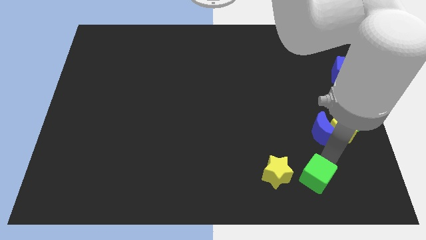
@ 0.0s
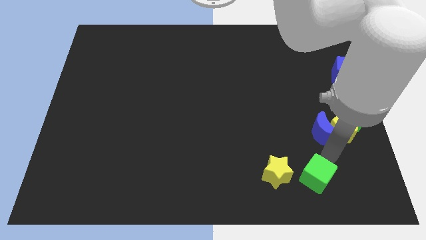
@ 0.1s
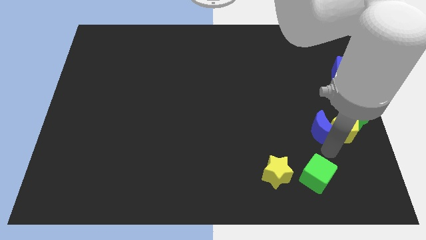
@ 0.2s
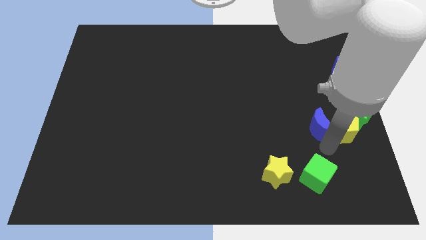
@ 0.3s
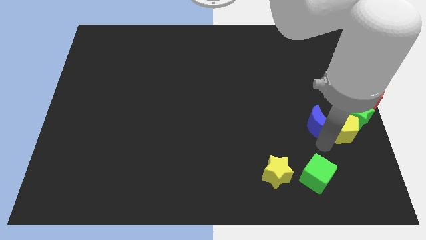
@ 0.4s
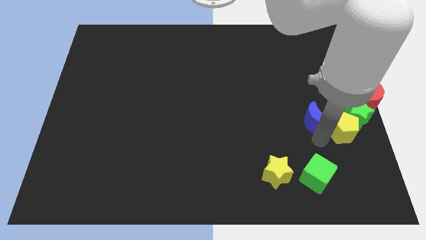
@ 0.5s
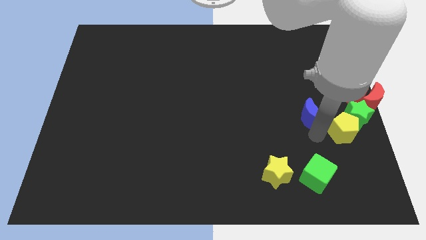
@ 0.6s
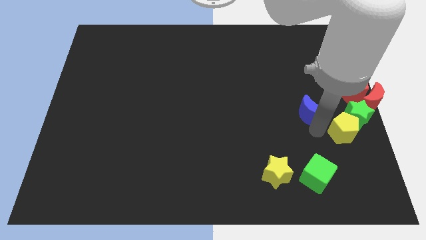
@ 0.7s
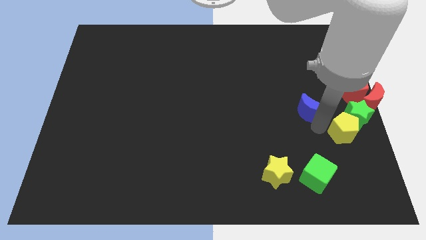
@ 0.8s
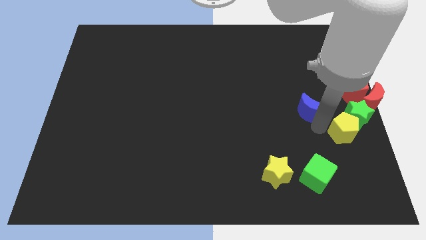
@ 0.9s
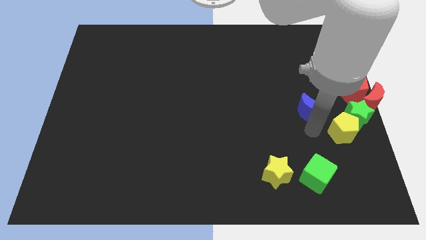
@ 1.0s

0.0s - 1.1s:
slide blue moon slightly upward

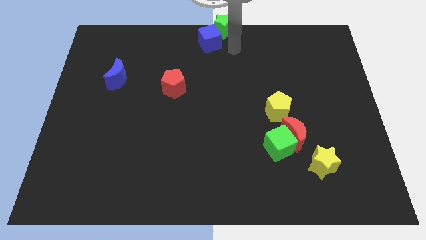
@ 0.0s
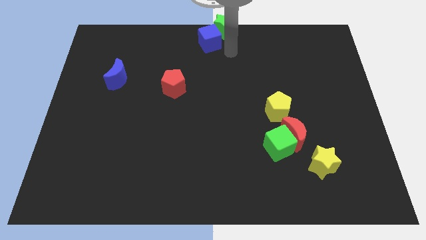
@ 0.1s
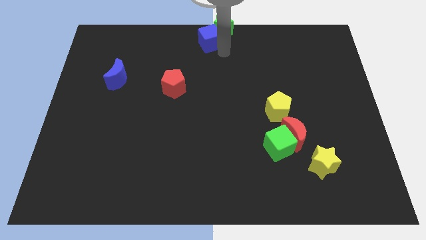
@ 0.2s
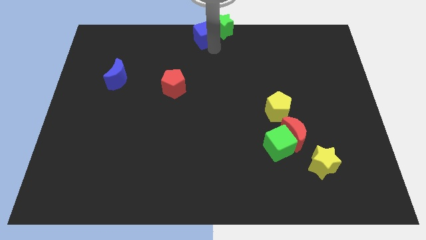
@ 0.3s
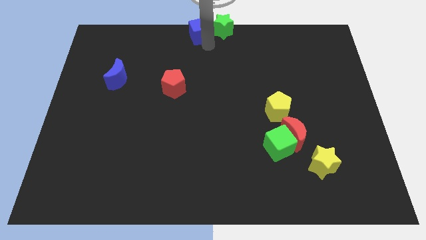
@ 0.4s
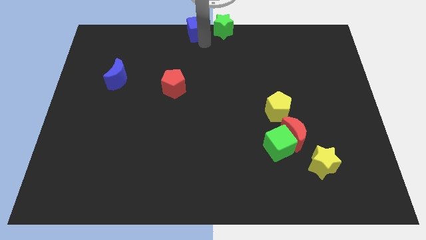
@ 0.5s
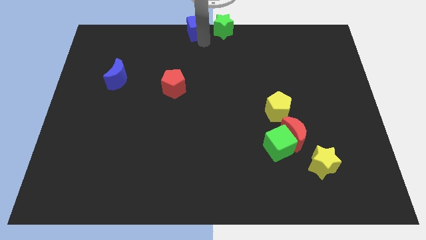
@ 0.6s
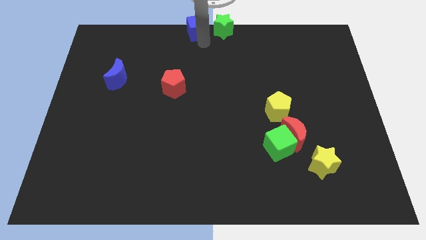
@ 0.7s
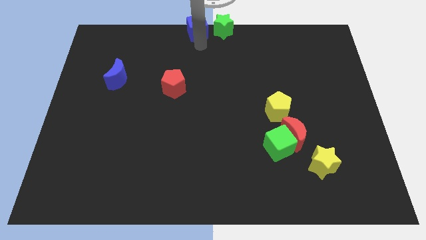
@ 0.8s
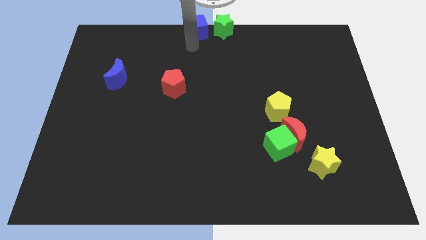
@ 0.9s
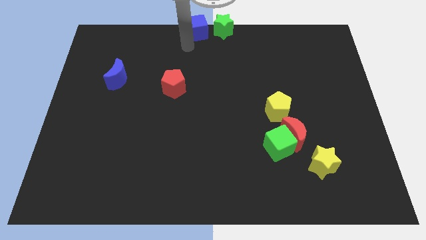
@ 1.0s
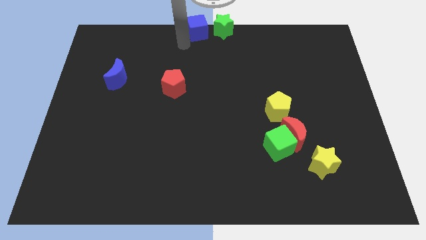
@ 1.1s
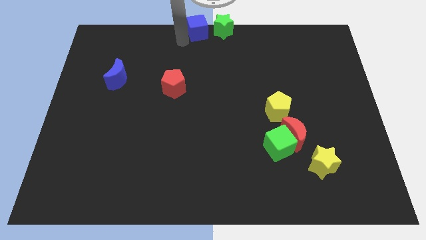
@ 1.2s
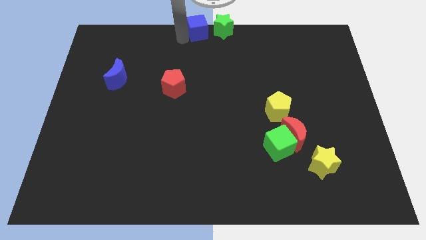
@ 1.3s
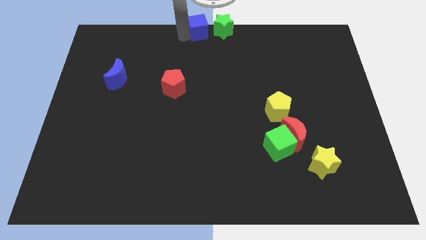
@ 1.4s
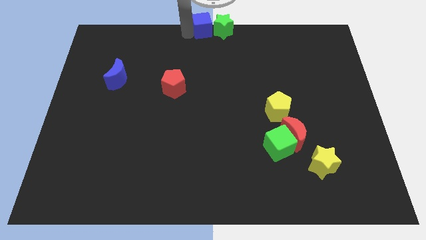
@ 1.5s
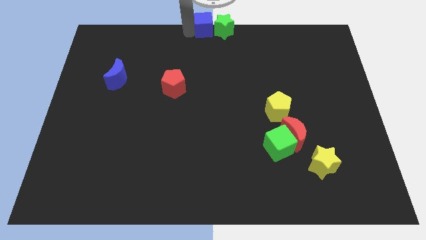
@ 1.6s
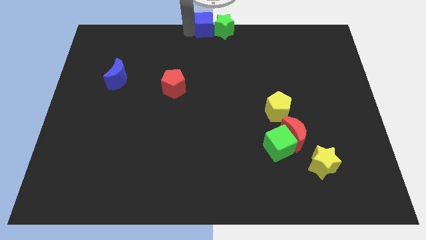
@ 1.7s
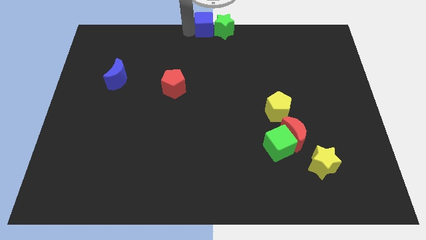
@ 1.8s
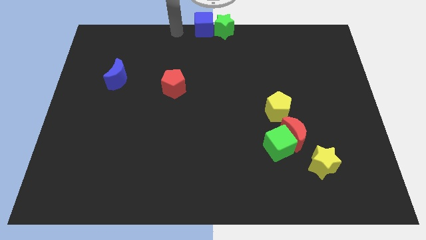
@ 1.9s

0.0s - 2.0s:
slide the blue cube to the top center

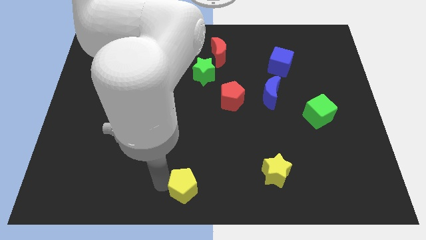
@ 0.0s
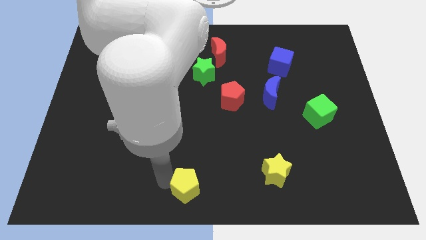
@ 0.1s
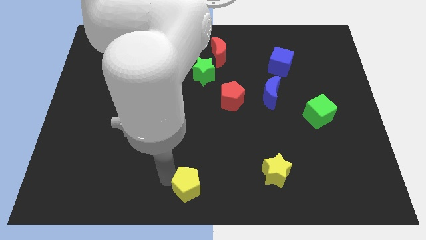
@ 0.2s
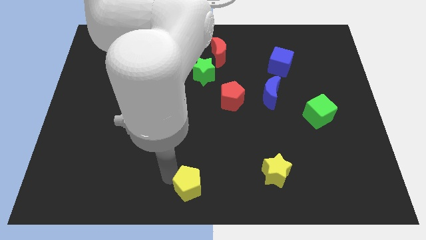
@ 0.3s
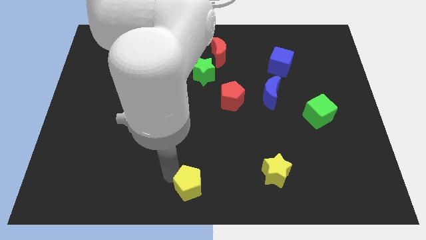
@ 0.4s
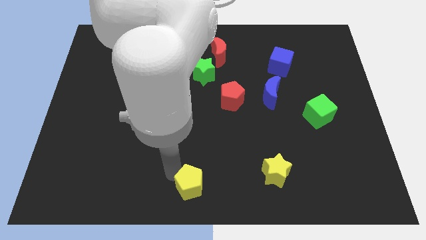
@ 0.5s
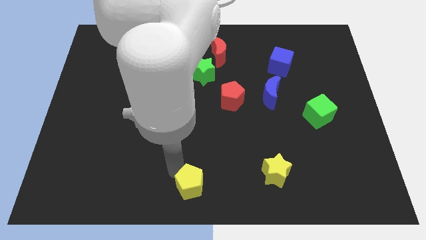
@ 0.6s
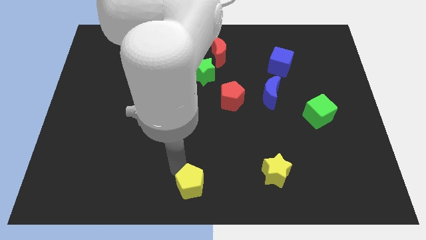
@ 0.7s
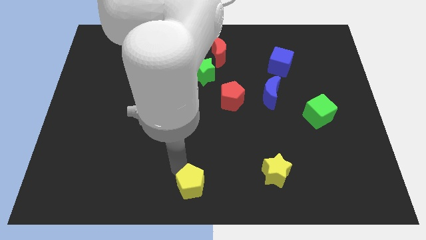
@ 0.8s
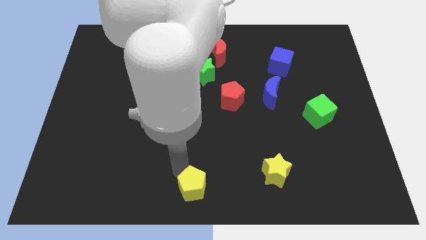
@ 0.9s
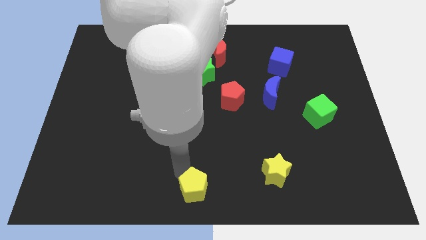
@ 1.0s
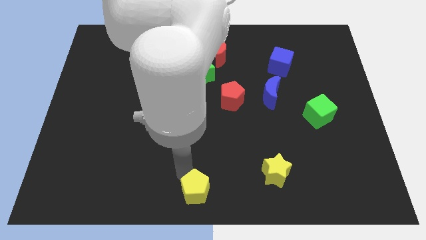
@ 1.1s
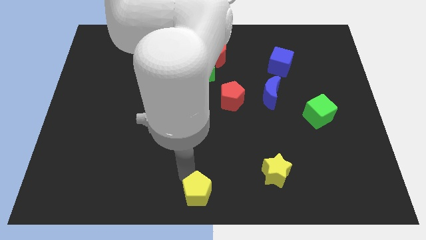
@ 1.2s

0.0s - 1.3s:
place the yellow pentagon at bottom center of the board

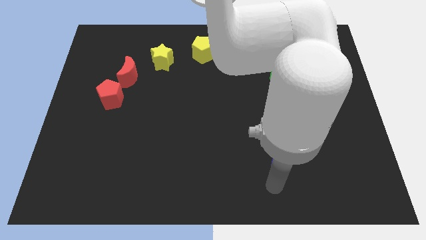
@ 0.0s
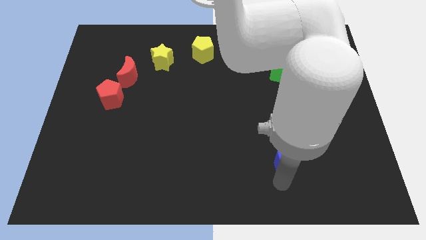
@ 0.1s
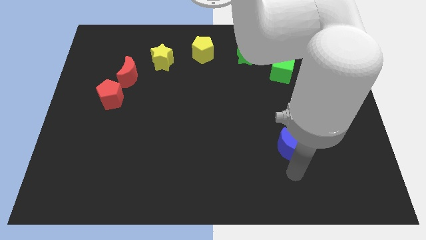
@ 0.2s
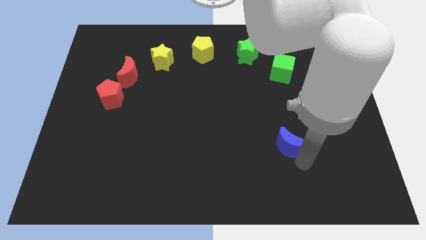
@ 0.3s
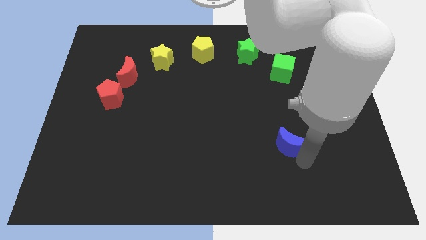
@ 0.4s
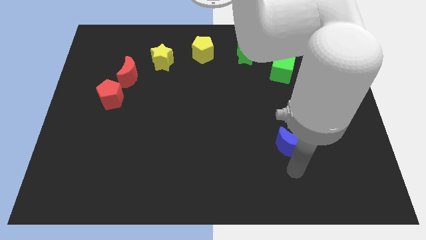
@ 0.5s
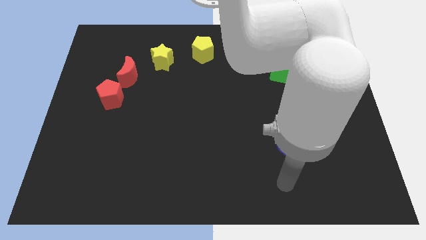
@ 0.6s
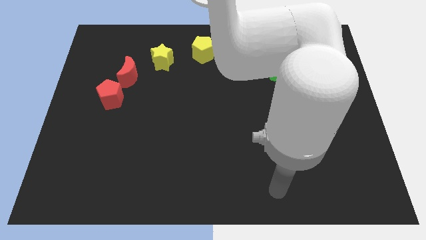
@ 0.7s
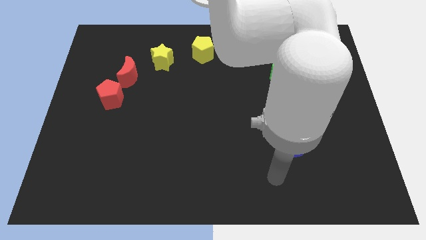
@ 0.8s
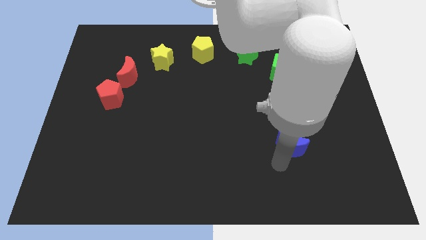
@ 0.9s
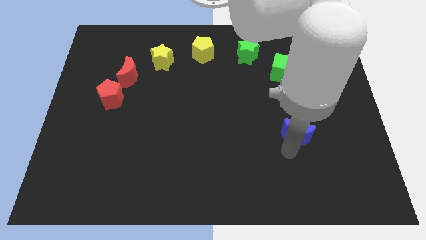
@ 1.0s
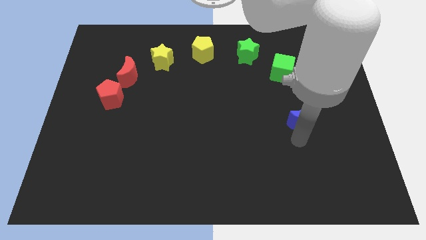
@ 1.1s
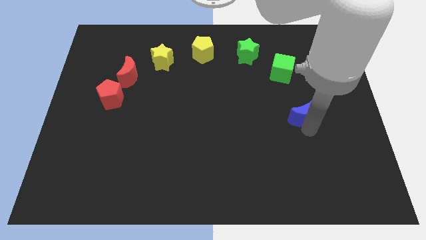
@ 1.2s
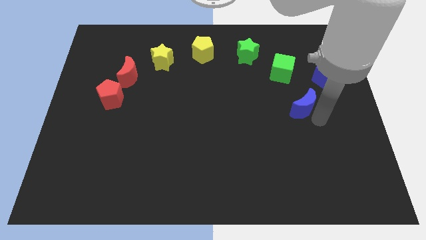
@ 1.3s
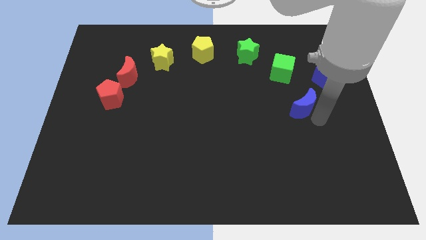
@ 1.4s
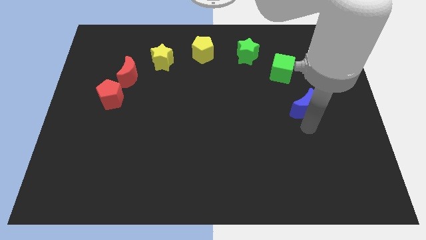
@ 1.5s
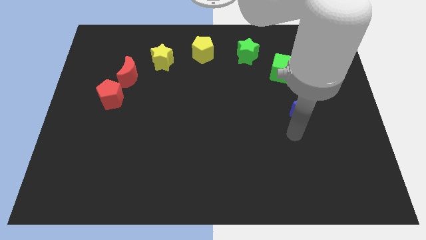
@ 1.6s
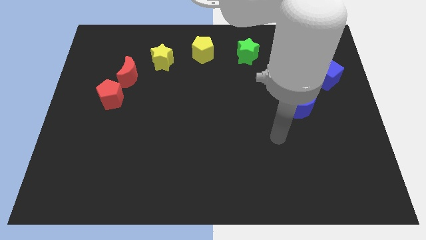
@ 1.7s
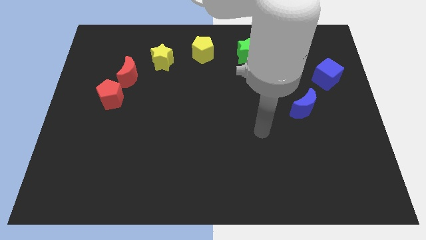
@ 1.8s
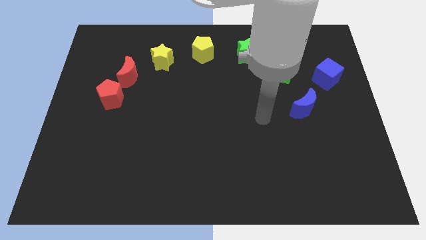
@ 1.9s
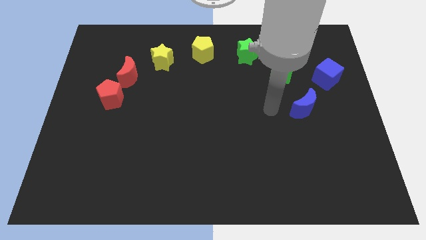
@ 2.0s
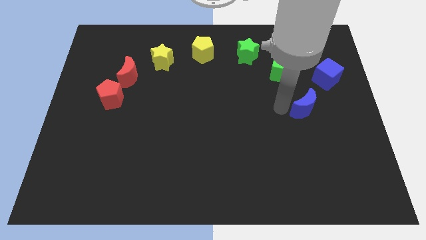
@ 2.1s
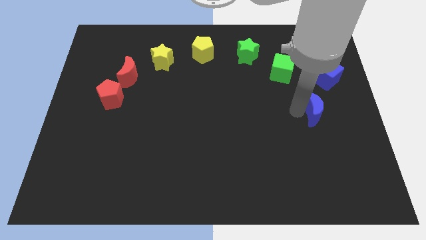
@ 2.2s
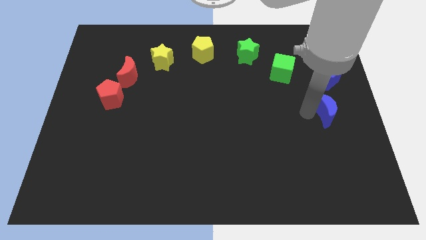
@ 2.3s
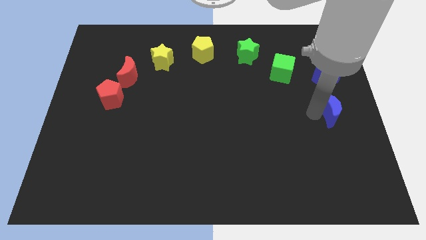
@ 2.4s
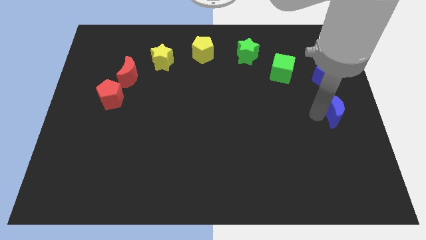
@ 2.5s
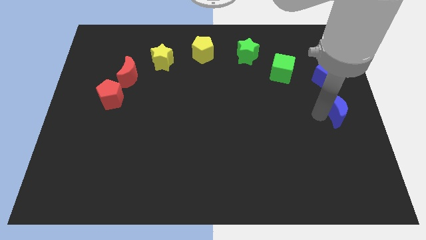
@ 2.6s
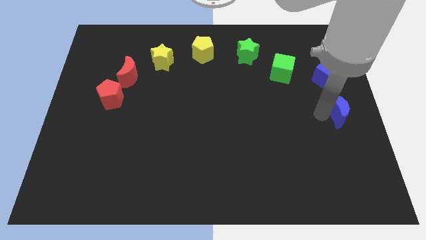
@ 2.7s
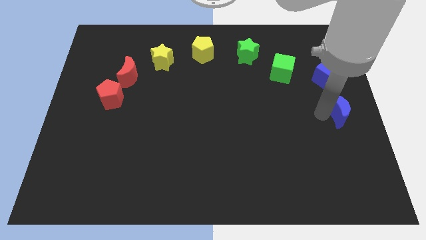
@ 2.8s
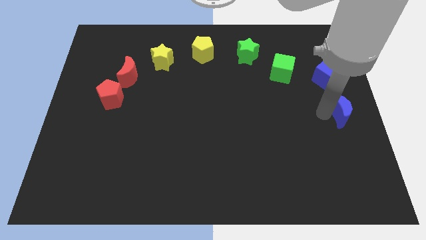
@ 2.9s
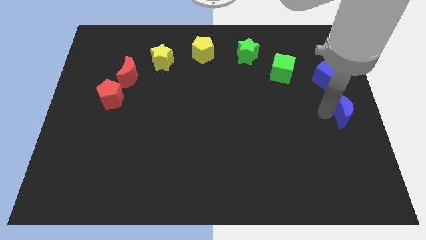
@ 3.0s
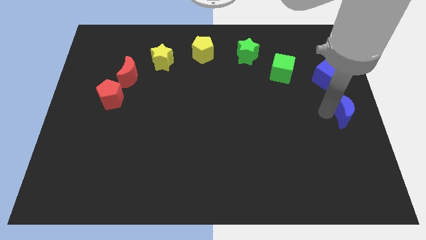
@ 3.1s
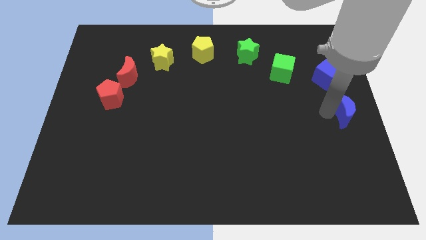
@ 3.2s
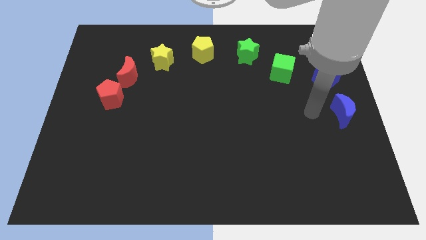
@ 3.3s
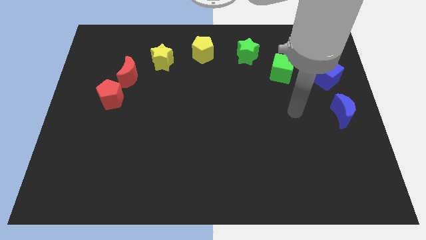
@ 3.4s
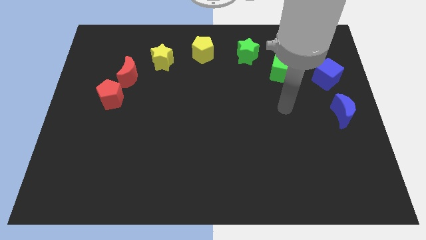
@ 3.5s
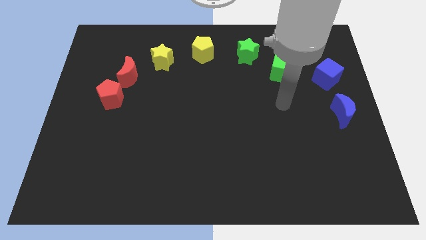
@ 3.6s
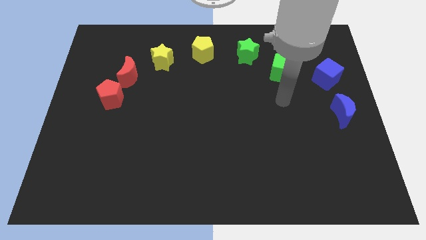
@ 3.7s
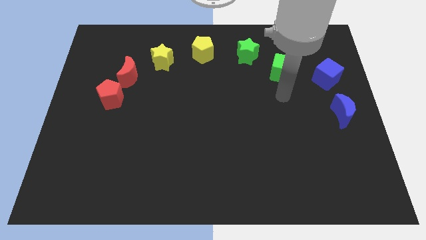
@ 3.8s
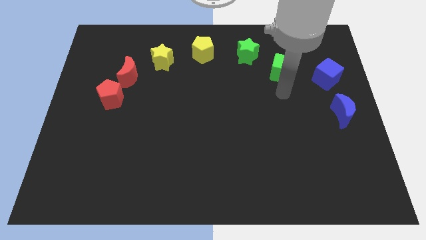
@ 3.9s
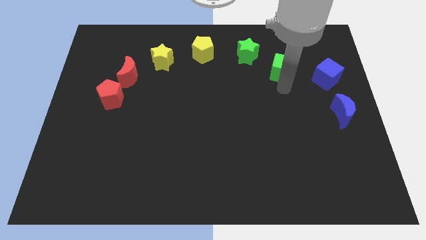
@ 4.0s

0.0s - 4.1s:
move blue moon below blue cube

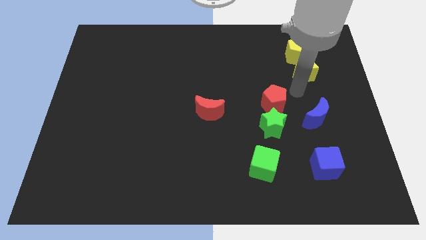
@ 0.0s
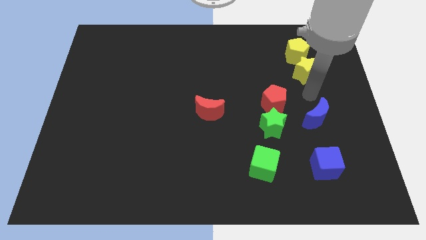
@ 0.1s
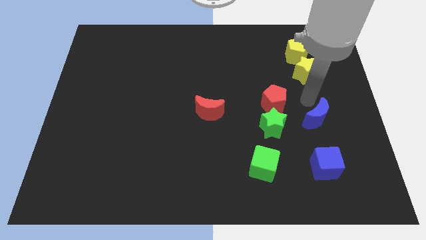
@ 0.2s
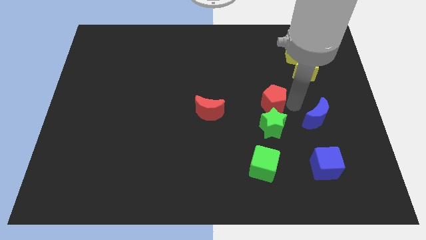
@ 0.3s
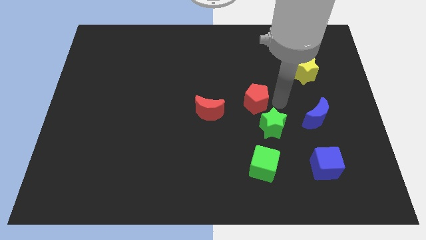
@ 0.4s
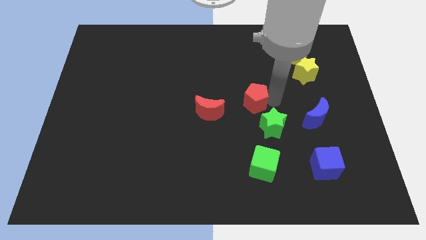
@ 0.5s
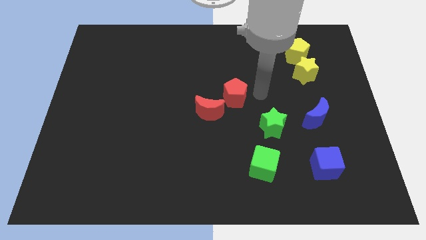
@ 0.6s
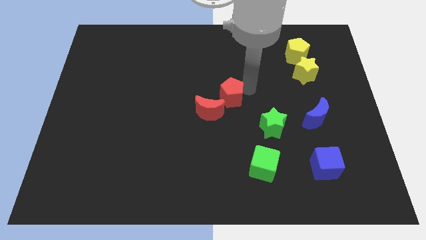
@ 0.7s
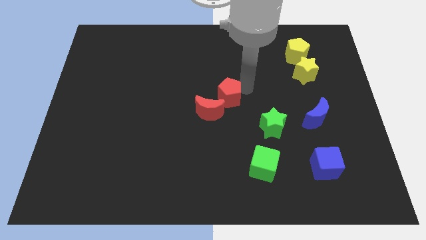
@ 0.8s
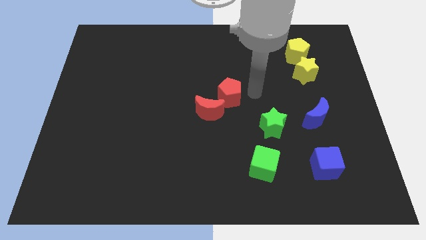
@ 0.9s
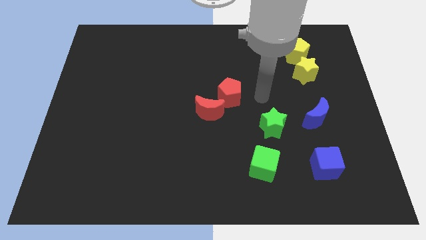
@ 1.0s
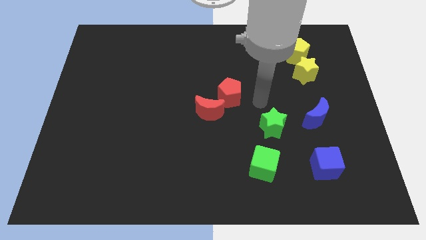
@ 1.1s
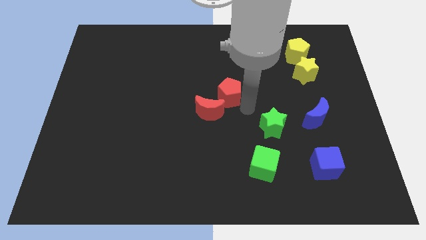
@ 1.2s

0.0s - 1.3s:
push the red pentagon towards the center side
